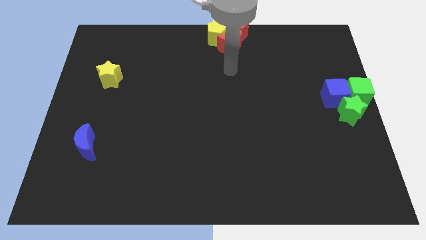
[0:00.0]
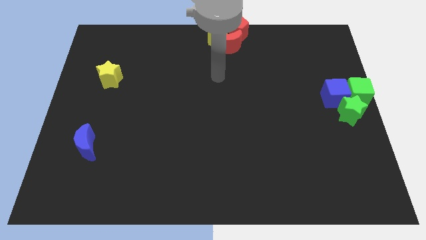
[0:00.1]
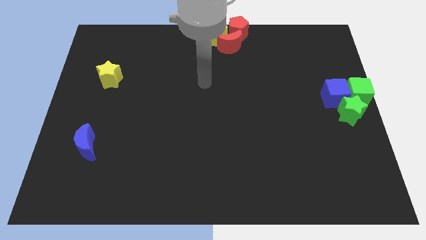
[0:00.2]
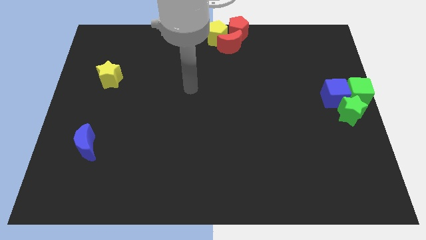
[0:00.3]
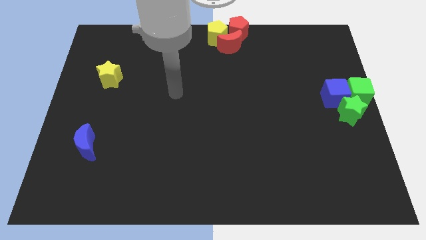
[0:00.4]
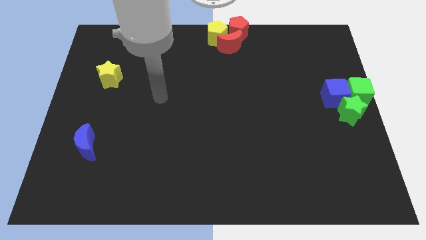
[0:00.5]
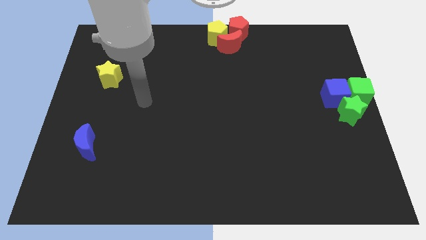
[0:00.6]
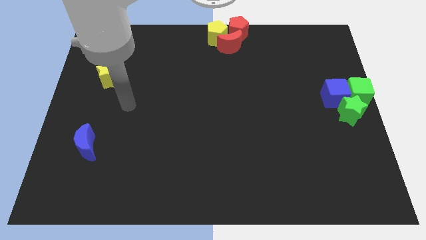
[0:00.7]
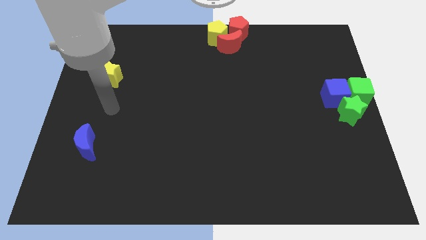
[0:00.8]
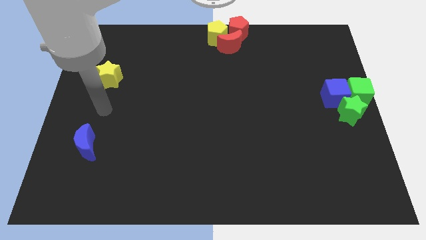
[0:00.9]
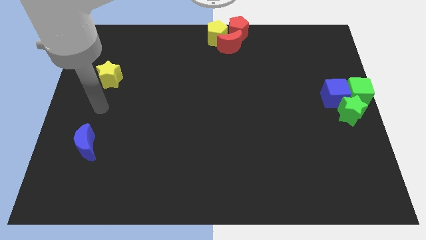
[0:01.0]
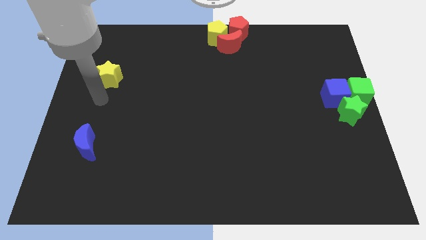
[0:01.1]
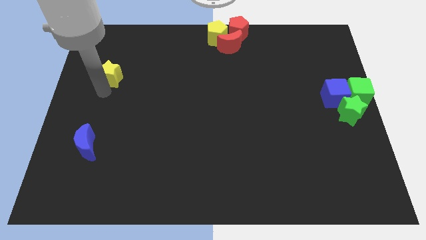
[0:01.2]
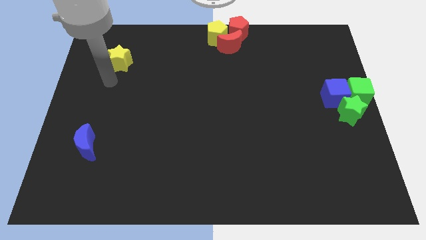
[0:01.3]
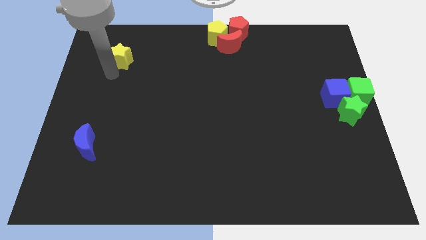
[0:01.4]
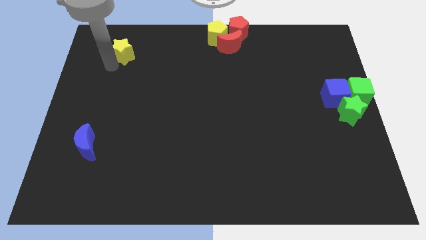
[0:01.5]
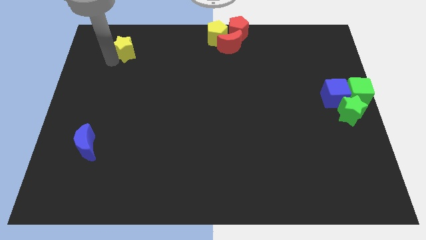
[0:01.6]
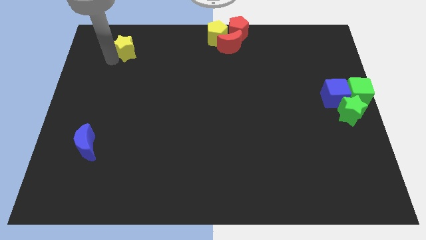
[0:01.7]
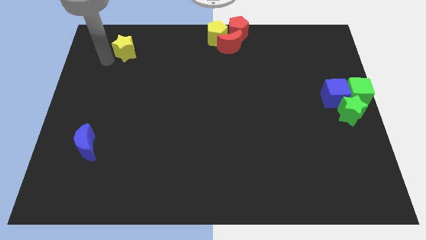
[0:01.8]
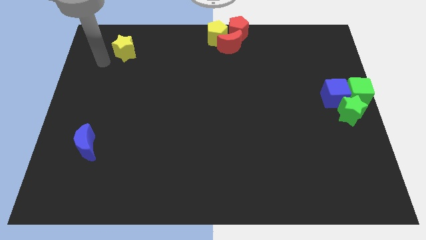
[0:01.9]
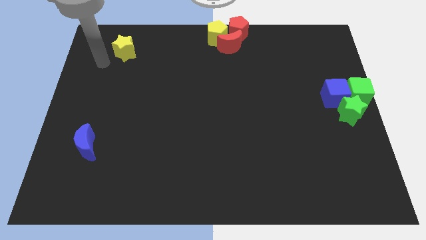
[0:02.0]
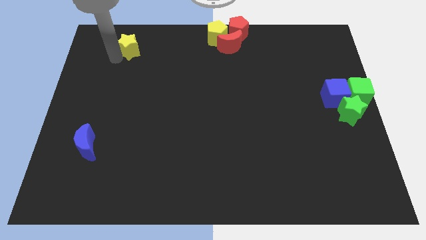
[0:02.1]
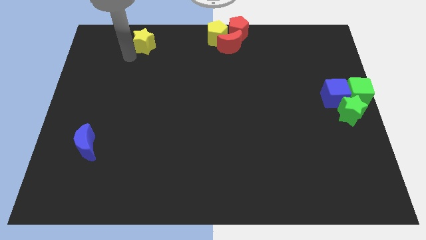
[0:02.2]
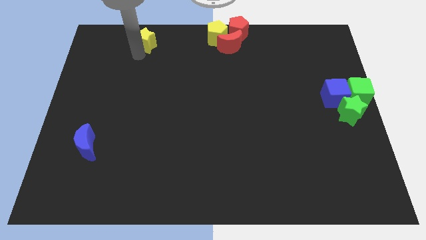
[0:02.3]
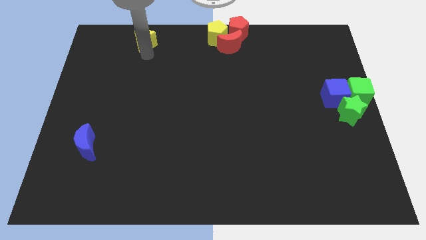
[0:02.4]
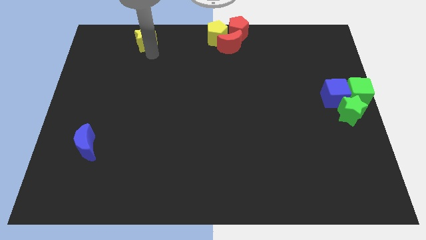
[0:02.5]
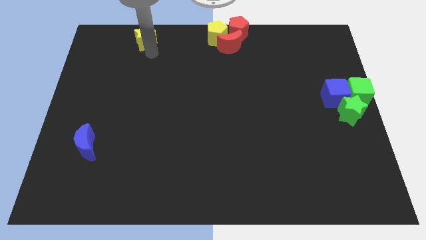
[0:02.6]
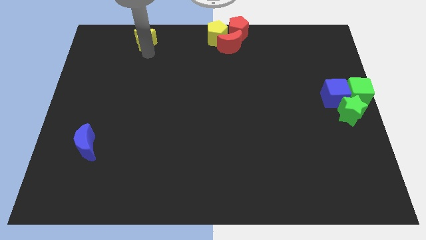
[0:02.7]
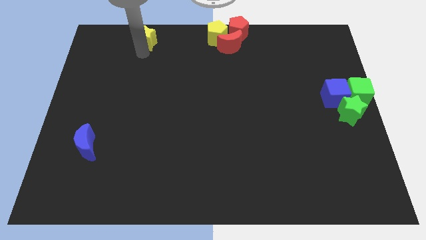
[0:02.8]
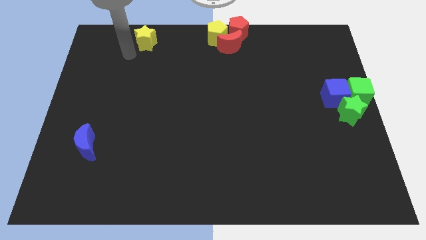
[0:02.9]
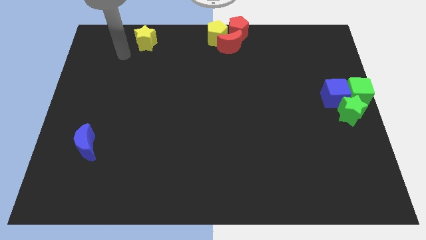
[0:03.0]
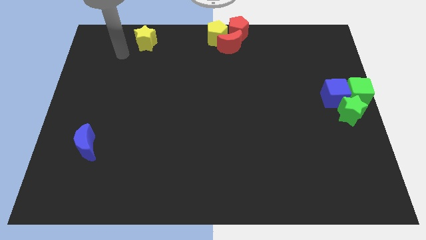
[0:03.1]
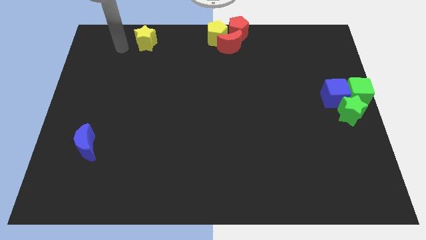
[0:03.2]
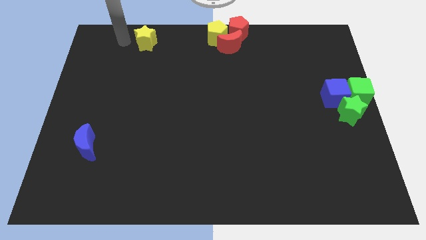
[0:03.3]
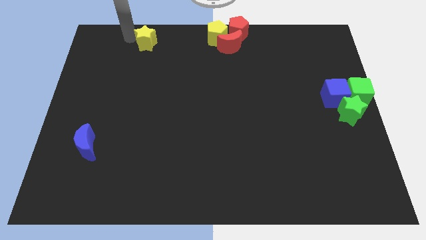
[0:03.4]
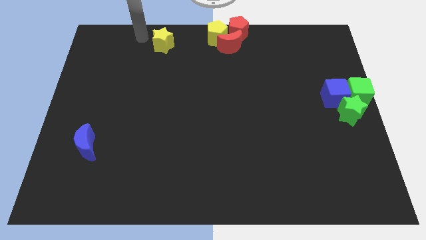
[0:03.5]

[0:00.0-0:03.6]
push the yellow star towards the yellow pentagon

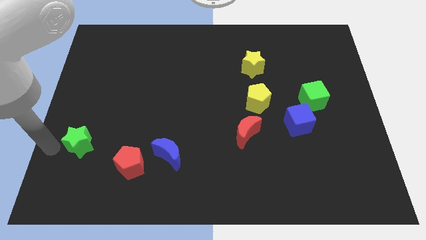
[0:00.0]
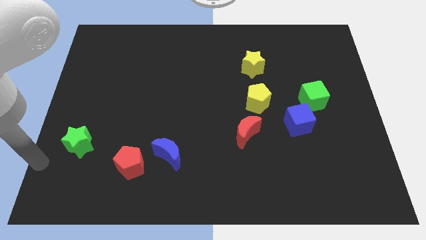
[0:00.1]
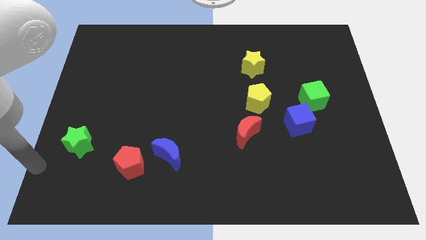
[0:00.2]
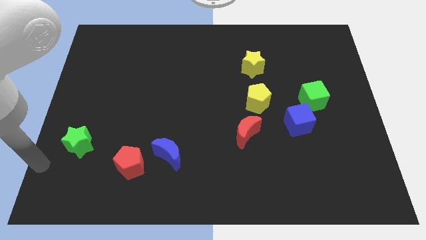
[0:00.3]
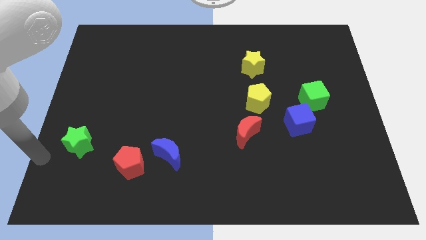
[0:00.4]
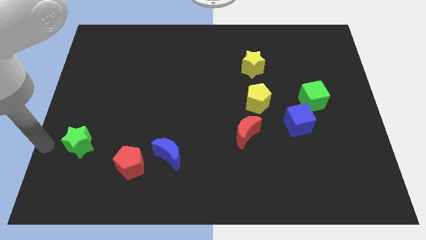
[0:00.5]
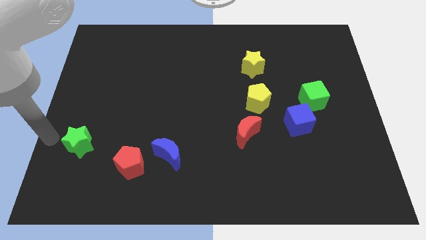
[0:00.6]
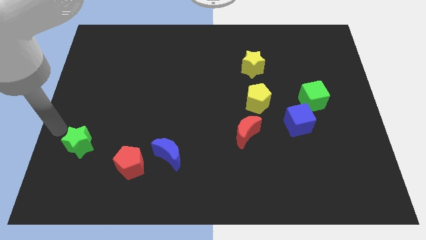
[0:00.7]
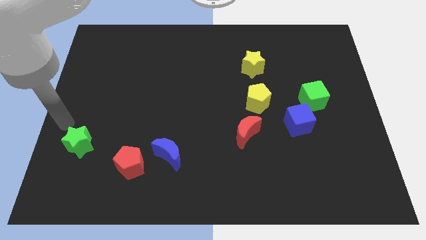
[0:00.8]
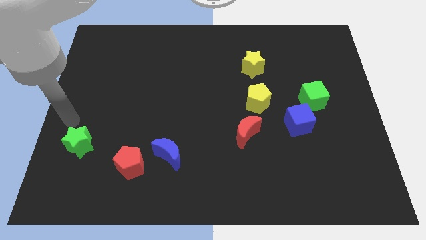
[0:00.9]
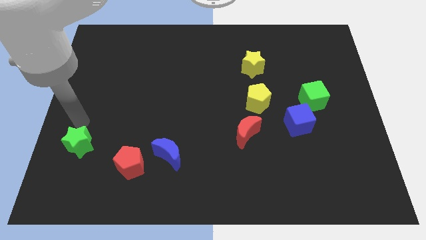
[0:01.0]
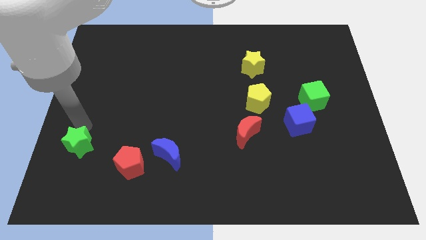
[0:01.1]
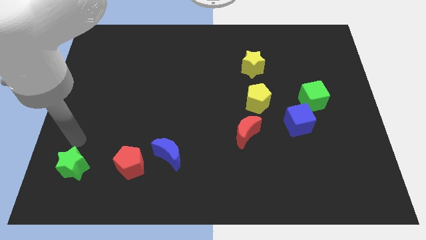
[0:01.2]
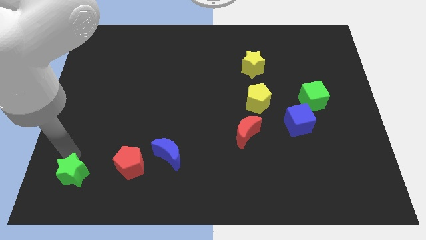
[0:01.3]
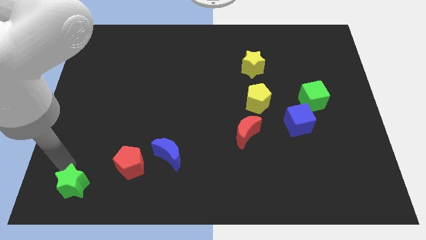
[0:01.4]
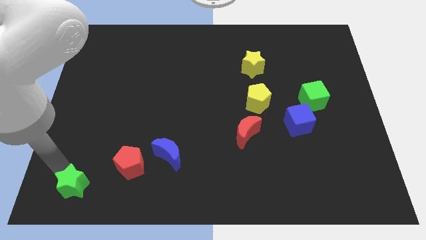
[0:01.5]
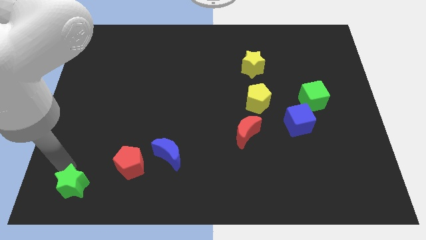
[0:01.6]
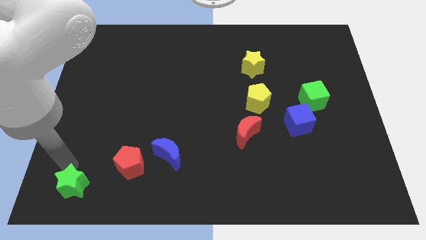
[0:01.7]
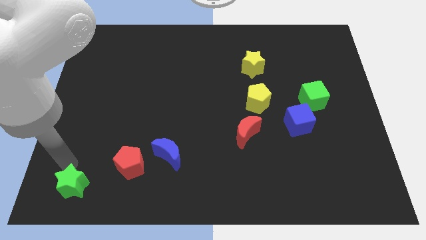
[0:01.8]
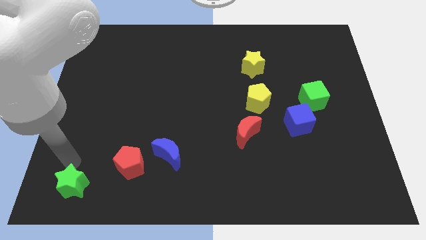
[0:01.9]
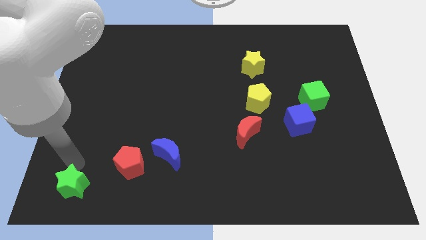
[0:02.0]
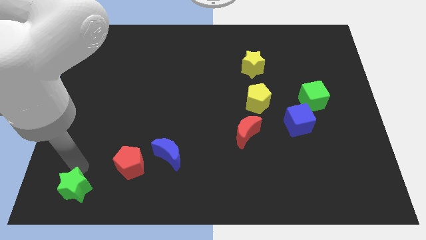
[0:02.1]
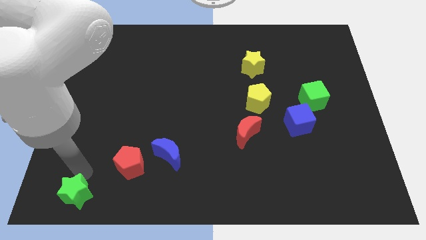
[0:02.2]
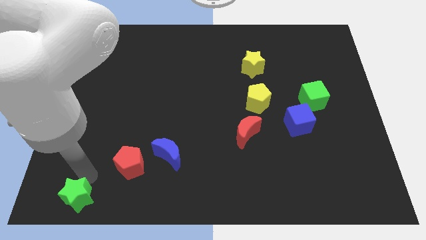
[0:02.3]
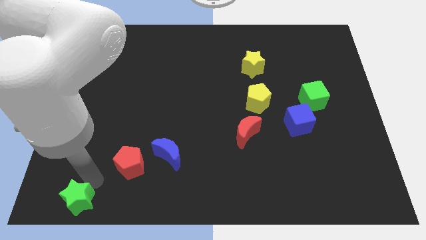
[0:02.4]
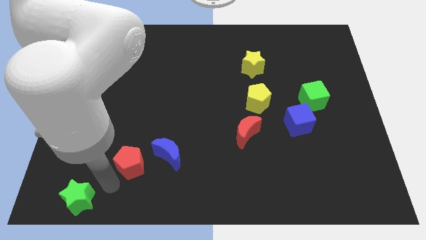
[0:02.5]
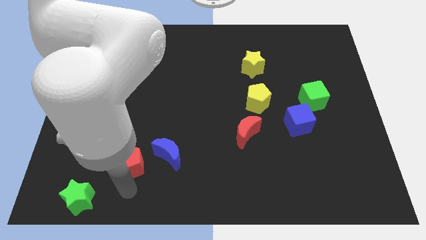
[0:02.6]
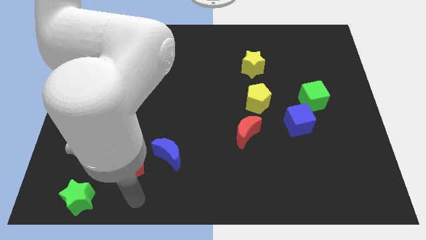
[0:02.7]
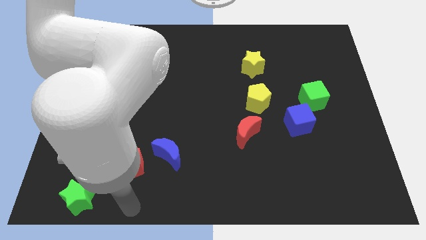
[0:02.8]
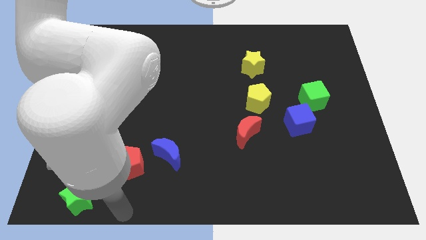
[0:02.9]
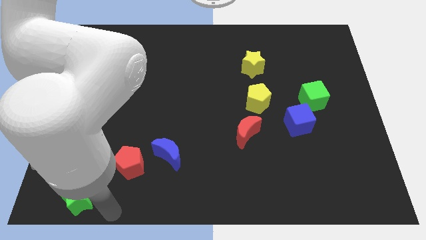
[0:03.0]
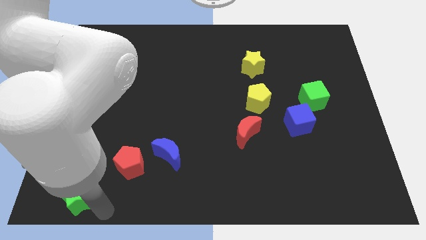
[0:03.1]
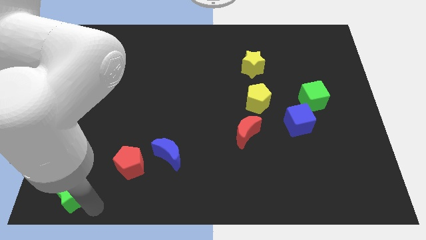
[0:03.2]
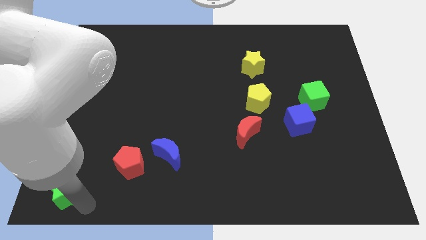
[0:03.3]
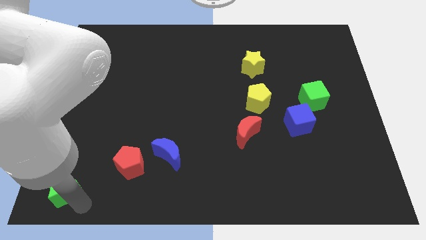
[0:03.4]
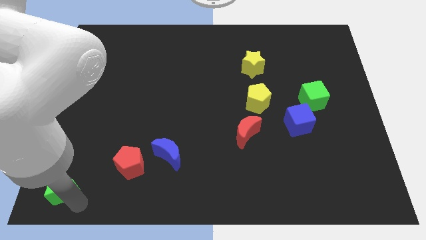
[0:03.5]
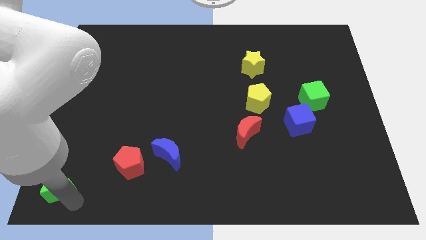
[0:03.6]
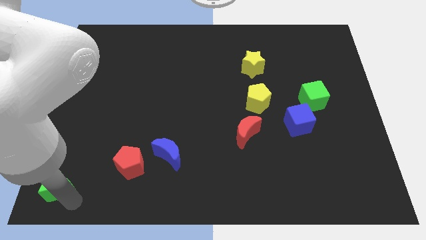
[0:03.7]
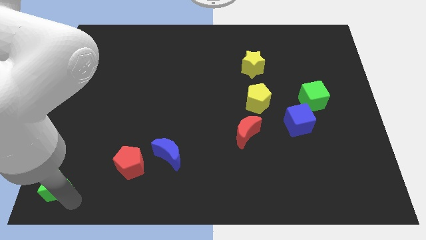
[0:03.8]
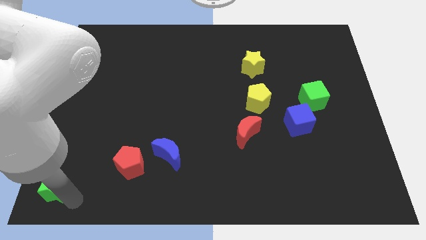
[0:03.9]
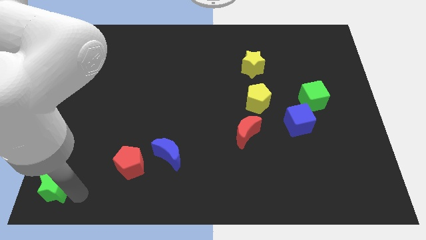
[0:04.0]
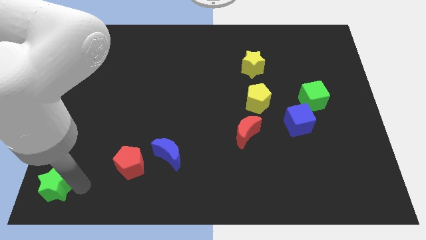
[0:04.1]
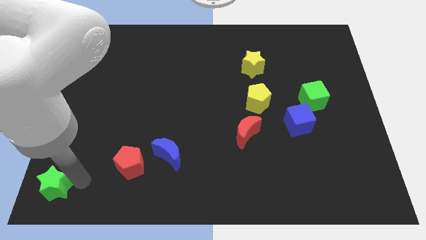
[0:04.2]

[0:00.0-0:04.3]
move the green star to the bottom left to the board

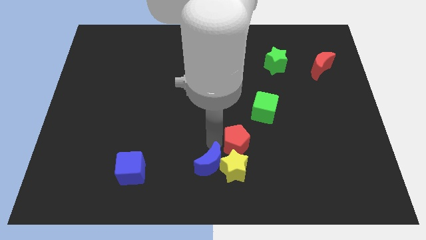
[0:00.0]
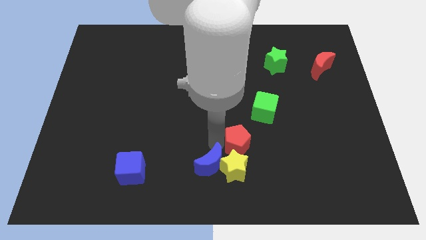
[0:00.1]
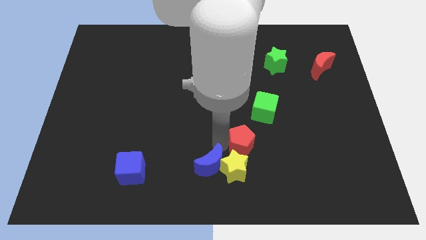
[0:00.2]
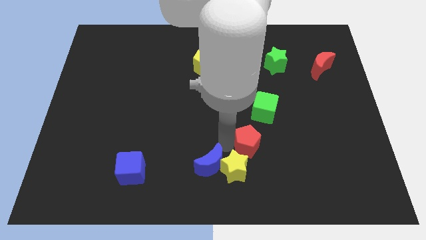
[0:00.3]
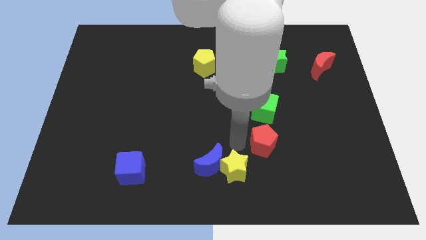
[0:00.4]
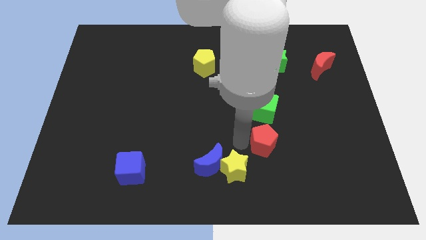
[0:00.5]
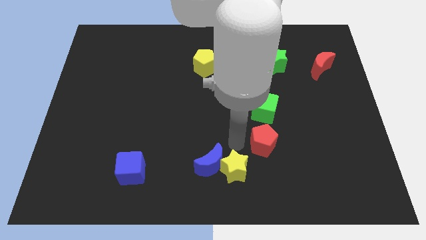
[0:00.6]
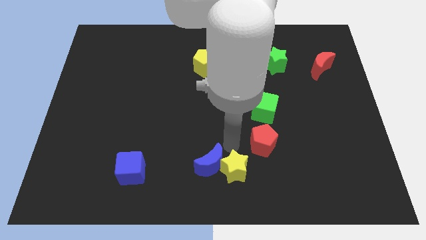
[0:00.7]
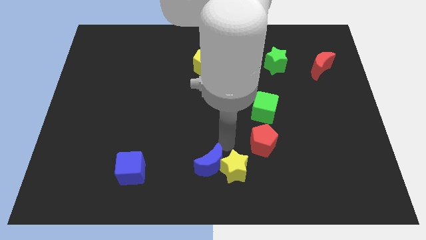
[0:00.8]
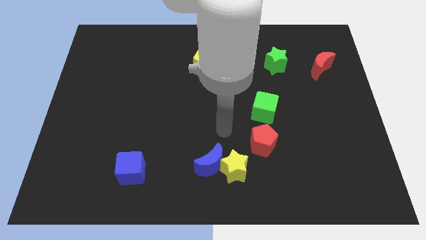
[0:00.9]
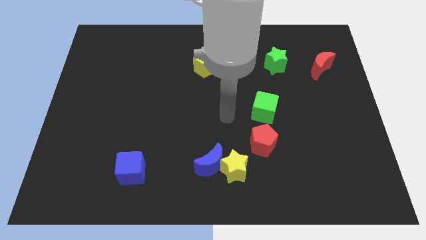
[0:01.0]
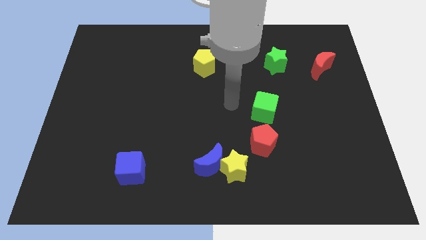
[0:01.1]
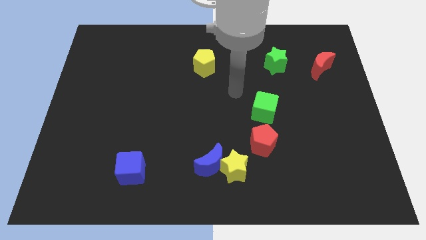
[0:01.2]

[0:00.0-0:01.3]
put the red pentagon below the green cube
